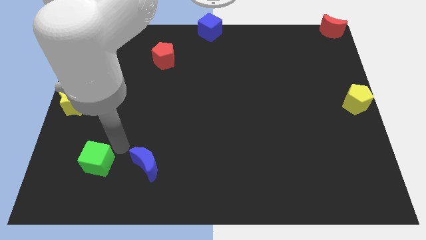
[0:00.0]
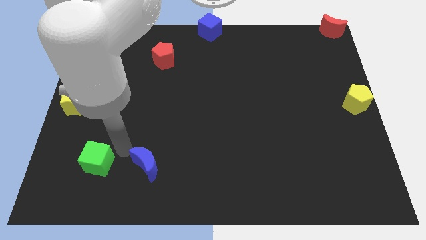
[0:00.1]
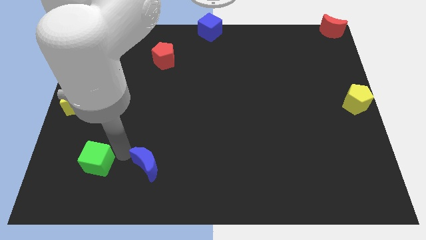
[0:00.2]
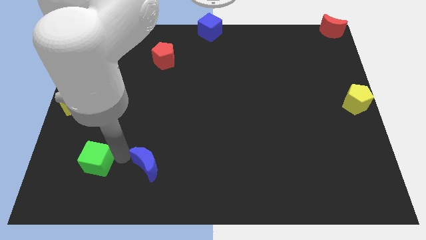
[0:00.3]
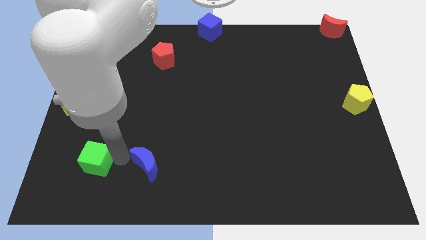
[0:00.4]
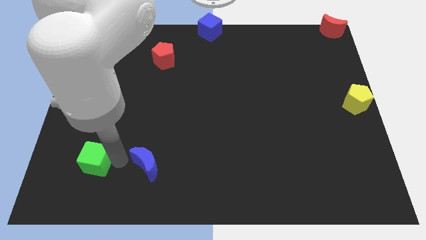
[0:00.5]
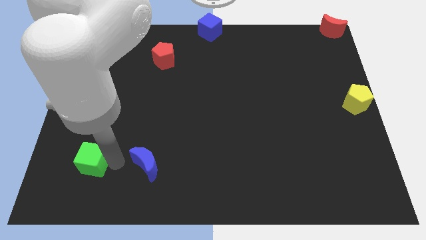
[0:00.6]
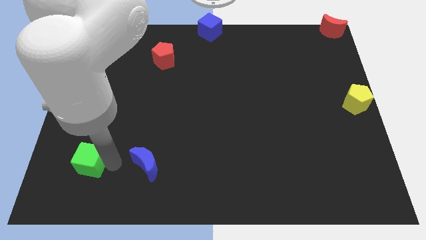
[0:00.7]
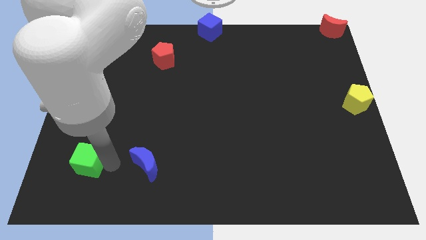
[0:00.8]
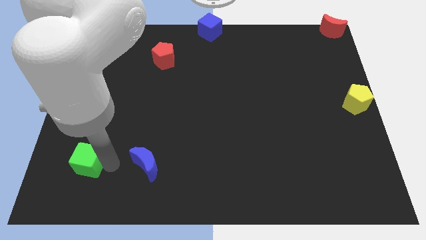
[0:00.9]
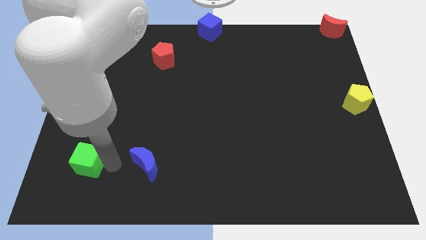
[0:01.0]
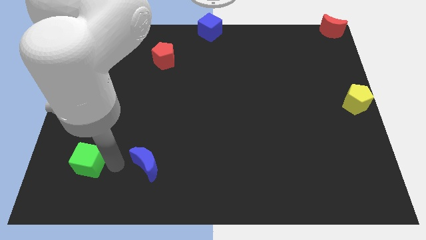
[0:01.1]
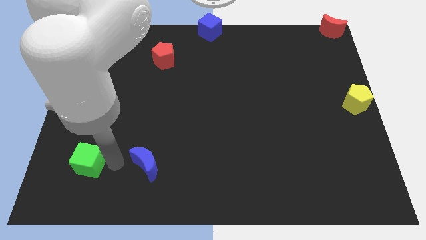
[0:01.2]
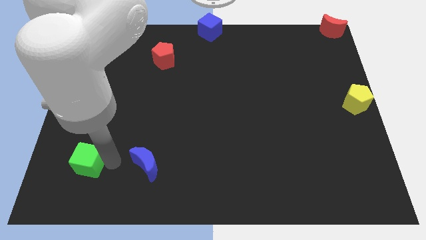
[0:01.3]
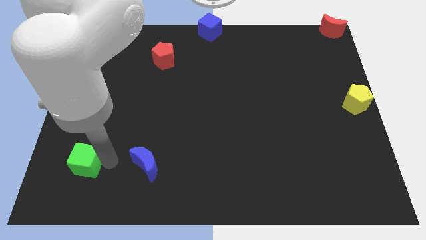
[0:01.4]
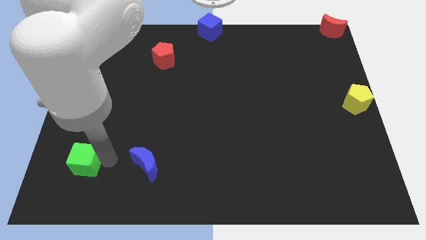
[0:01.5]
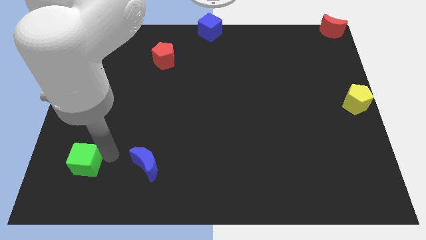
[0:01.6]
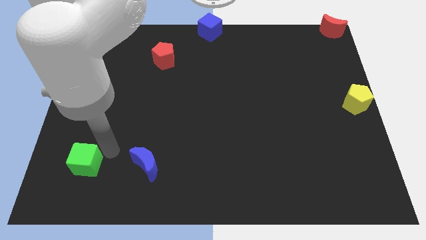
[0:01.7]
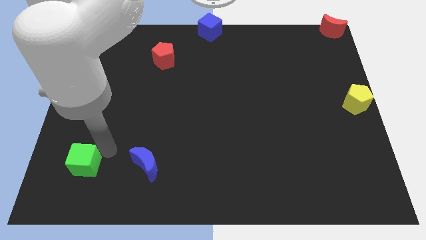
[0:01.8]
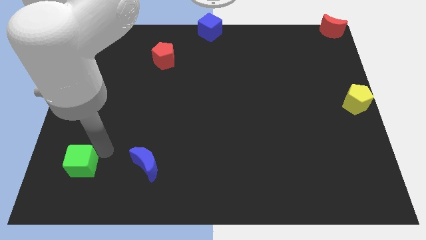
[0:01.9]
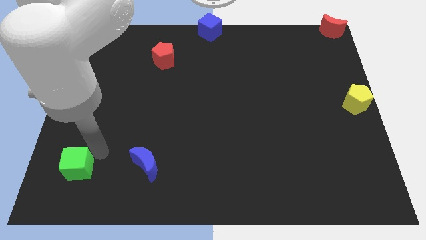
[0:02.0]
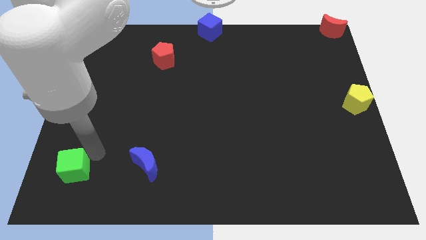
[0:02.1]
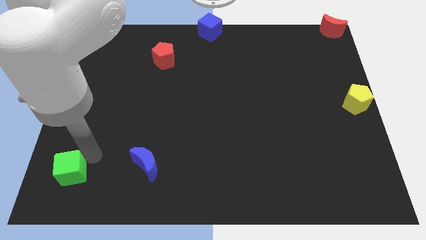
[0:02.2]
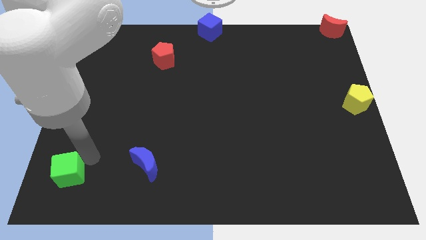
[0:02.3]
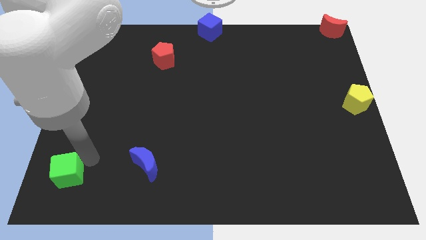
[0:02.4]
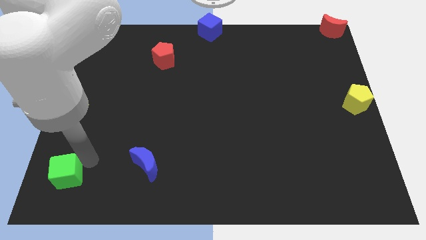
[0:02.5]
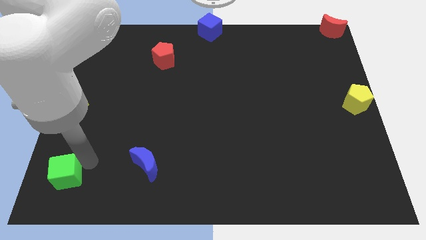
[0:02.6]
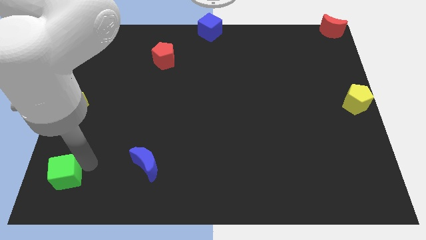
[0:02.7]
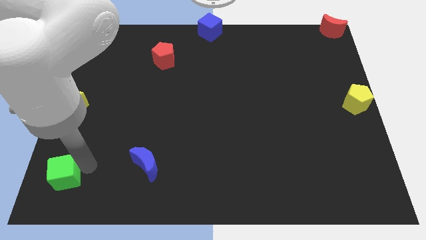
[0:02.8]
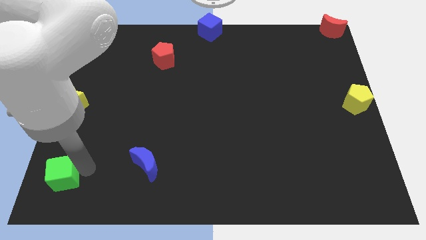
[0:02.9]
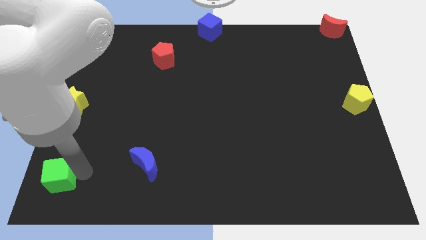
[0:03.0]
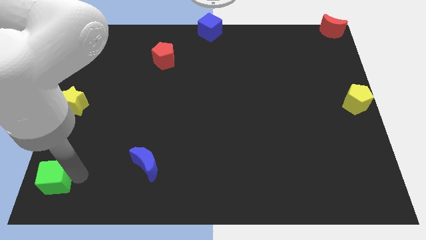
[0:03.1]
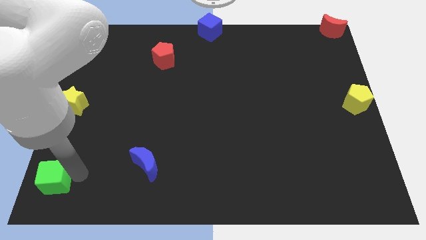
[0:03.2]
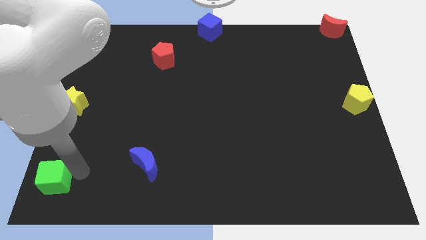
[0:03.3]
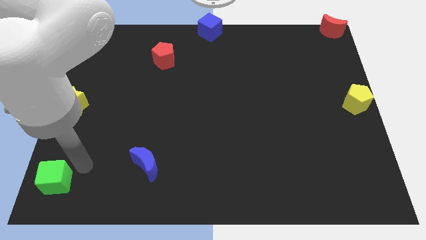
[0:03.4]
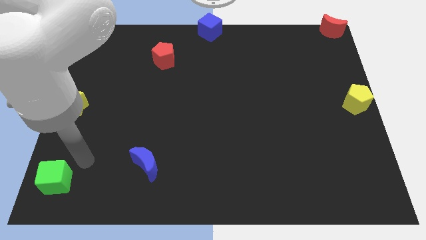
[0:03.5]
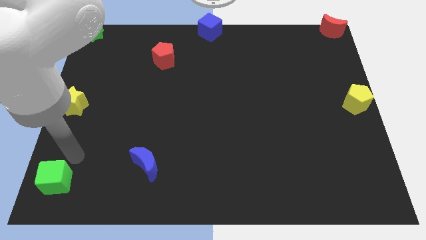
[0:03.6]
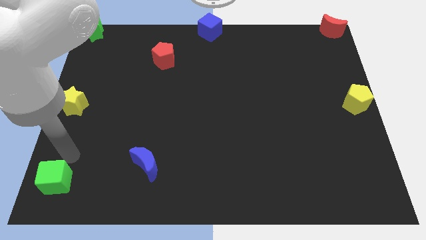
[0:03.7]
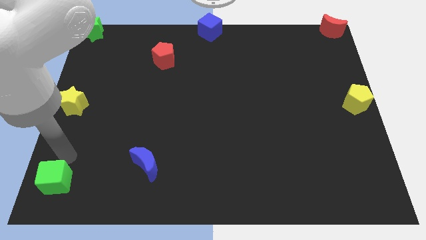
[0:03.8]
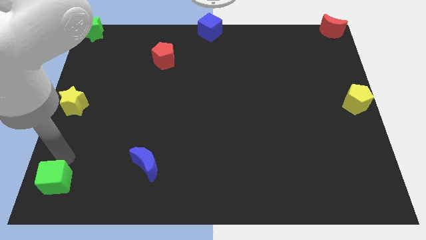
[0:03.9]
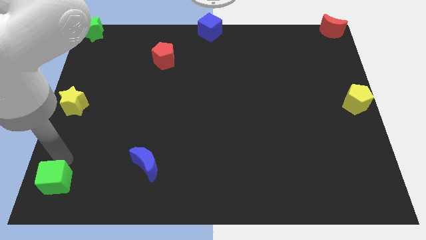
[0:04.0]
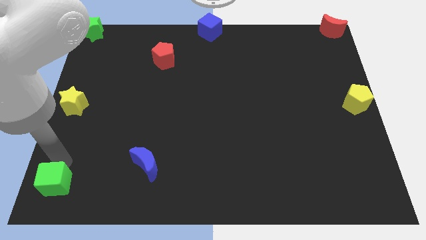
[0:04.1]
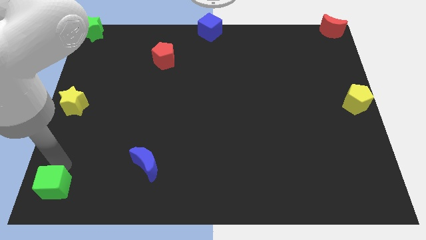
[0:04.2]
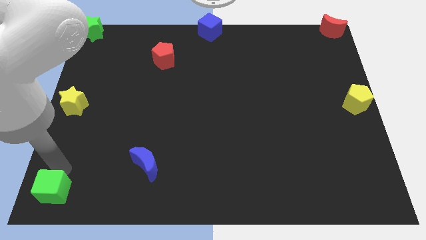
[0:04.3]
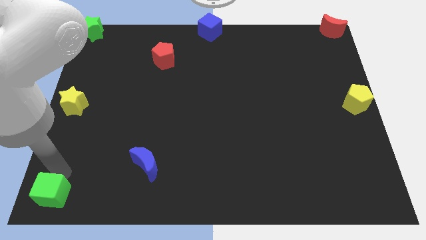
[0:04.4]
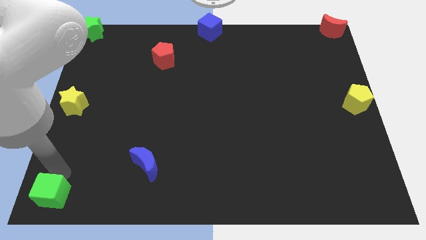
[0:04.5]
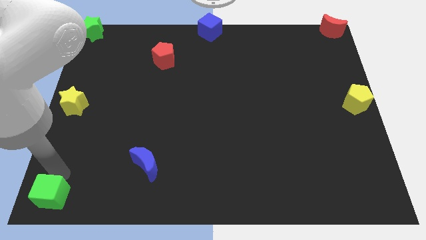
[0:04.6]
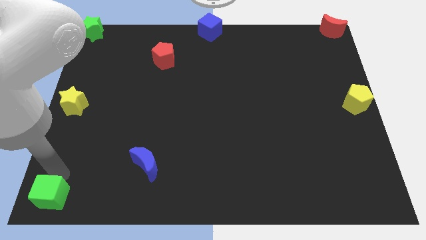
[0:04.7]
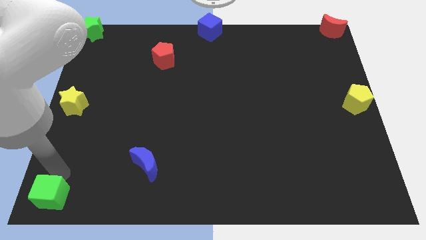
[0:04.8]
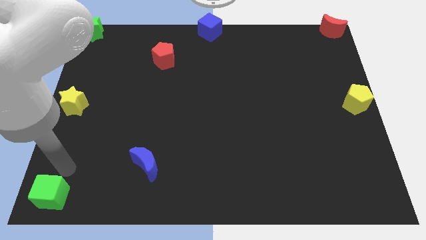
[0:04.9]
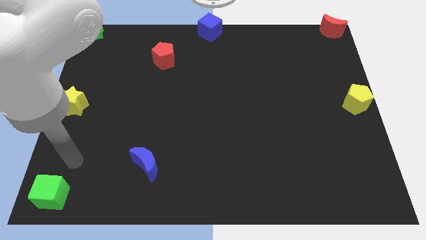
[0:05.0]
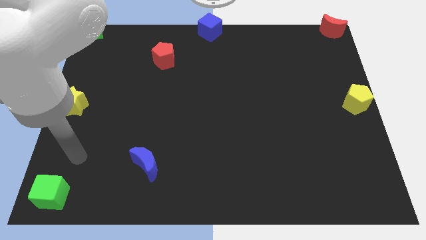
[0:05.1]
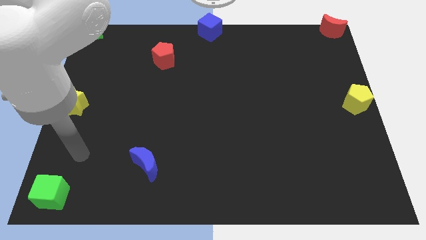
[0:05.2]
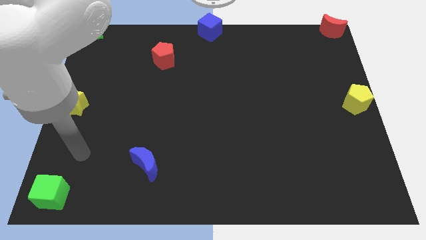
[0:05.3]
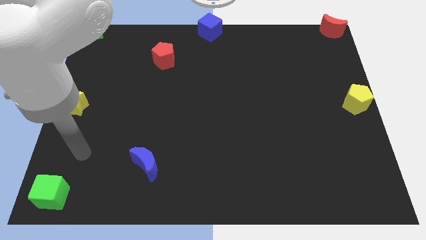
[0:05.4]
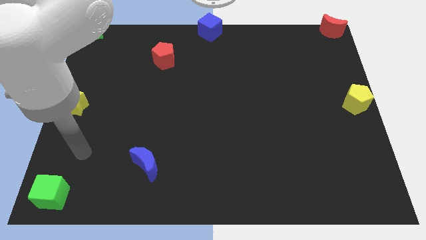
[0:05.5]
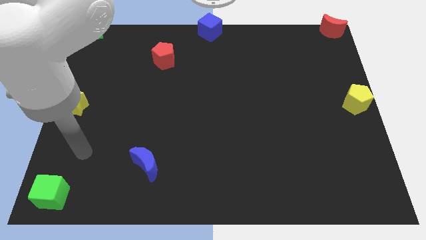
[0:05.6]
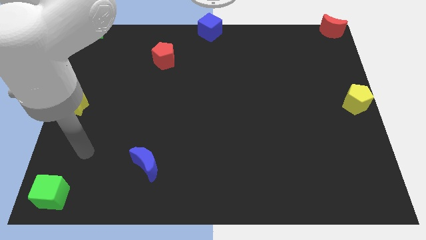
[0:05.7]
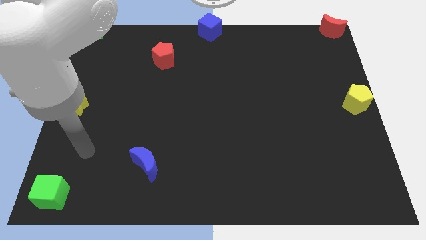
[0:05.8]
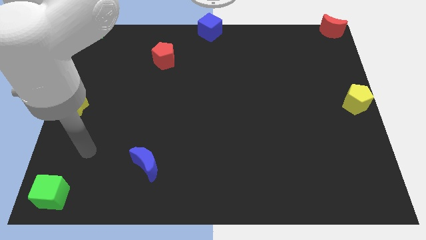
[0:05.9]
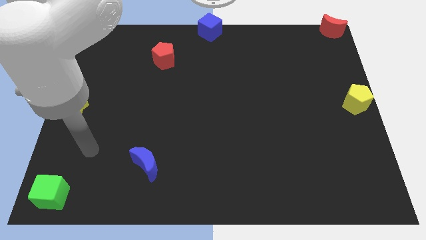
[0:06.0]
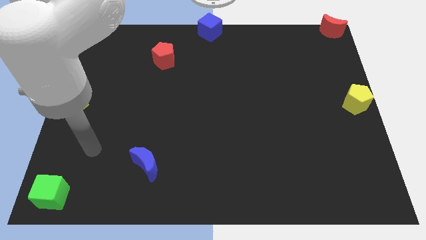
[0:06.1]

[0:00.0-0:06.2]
move the green cube to the bottom left corner

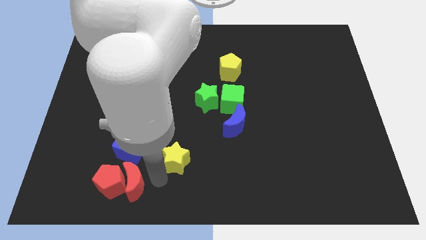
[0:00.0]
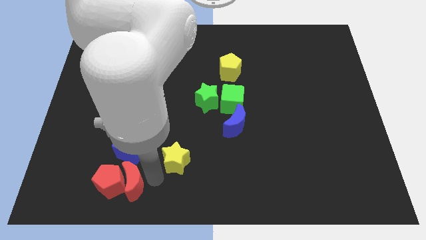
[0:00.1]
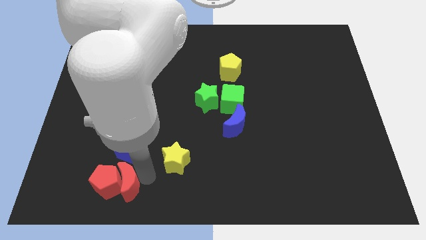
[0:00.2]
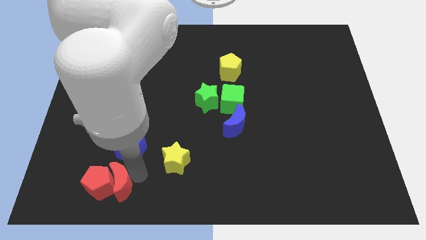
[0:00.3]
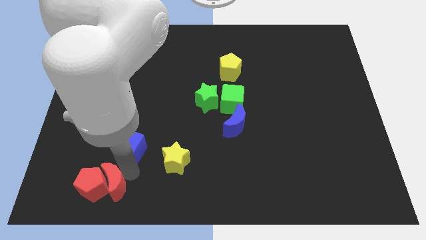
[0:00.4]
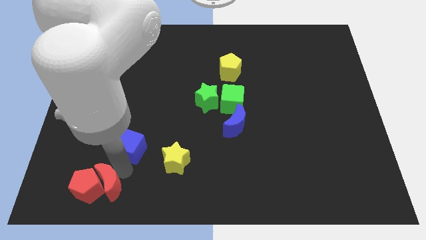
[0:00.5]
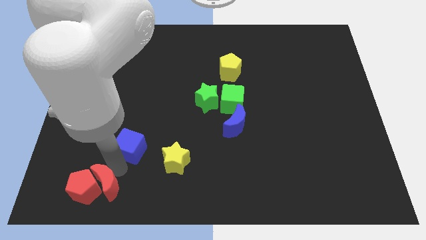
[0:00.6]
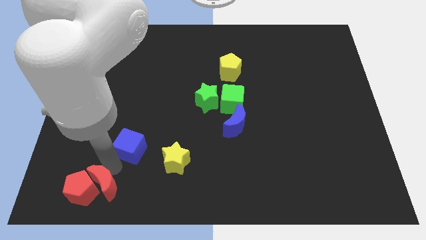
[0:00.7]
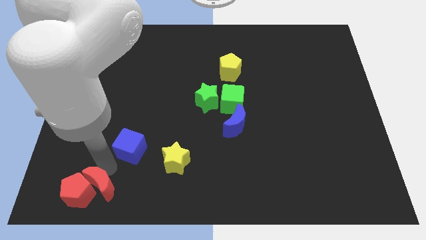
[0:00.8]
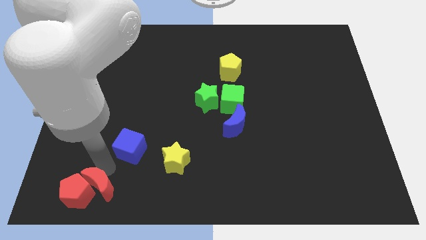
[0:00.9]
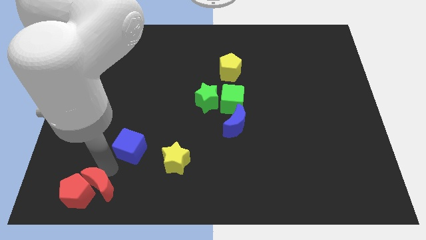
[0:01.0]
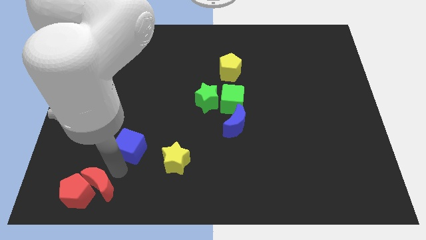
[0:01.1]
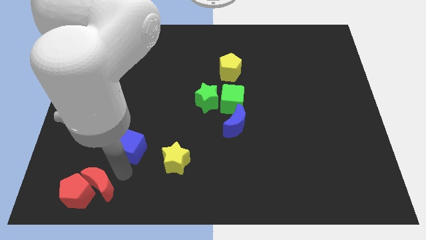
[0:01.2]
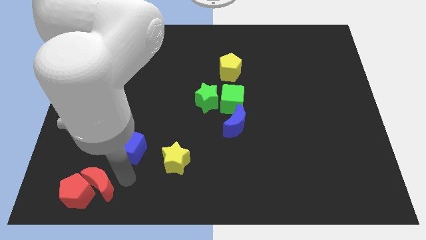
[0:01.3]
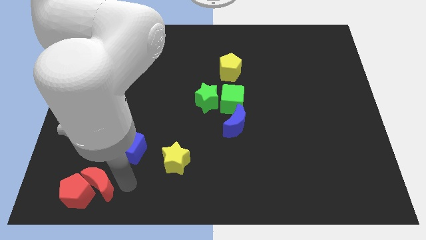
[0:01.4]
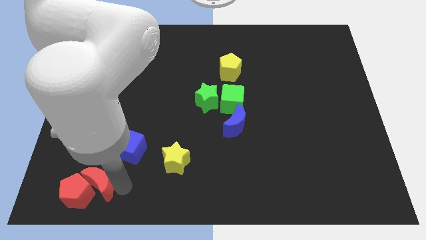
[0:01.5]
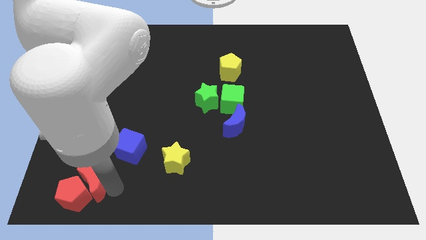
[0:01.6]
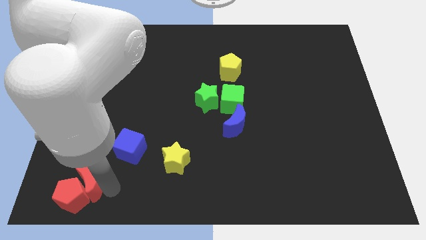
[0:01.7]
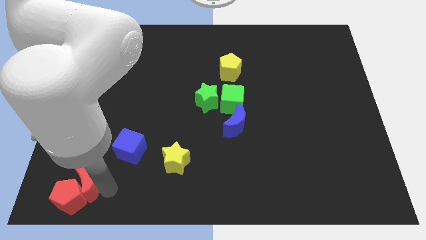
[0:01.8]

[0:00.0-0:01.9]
push the red moon and red pentagon towards the bottom left of the board

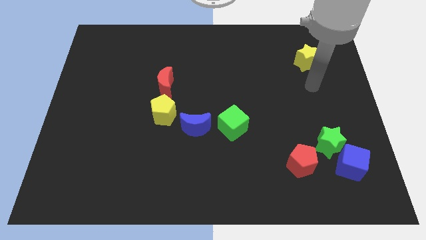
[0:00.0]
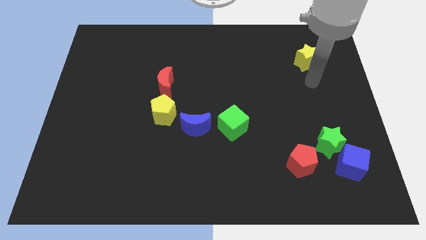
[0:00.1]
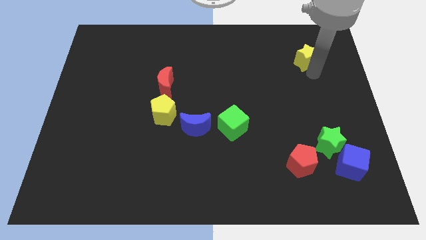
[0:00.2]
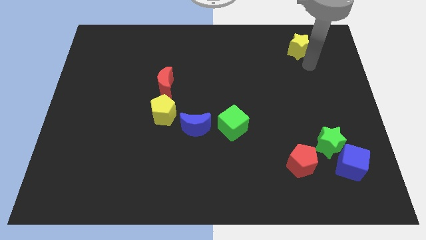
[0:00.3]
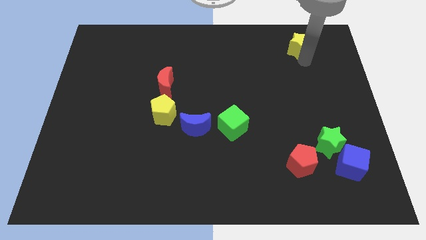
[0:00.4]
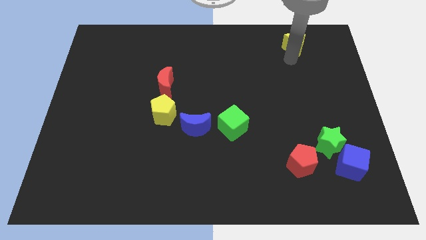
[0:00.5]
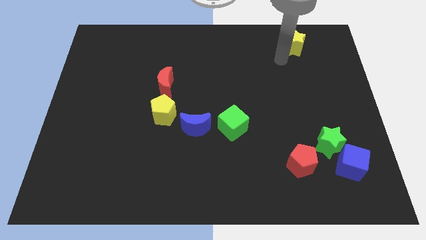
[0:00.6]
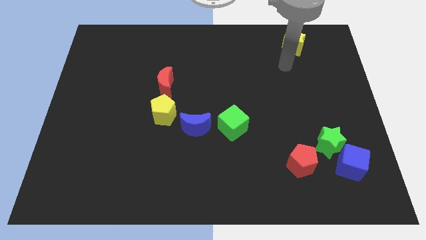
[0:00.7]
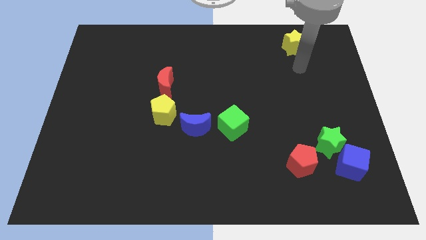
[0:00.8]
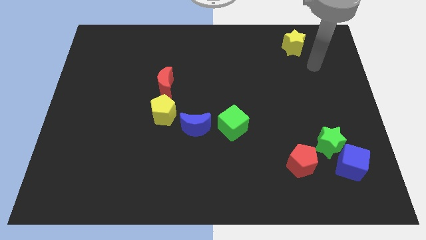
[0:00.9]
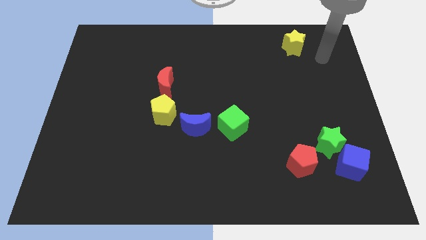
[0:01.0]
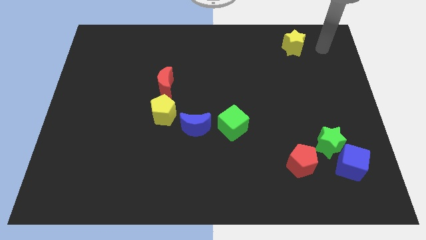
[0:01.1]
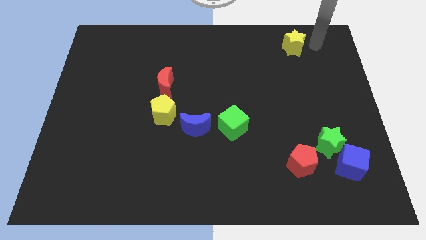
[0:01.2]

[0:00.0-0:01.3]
move the yellow star to the upwards slightly
